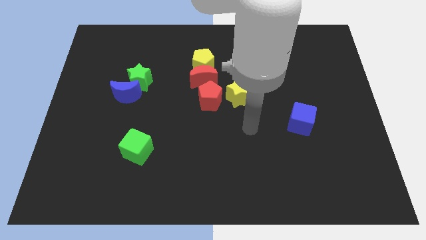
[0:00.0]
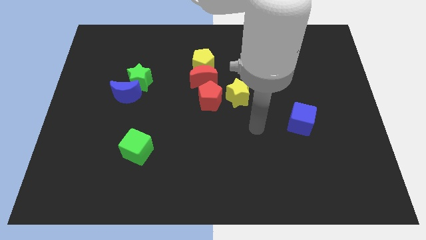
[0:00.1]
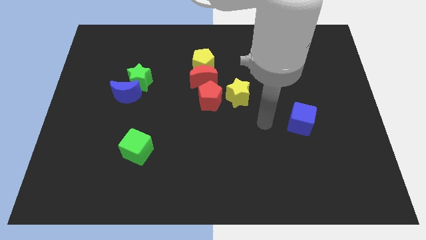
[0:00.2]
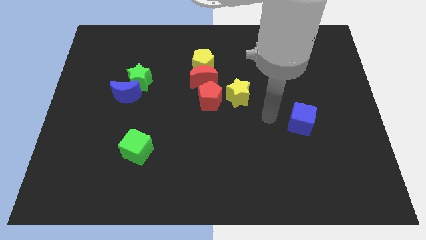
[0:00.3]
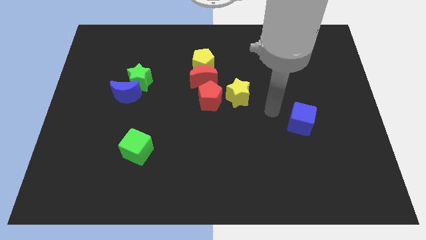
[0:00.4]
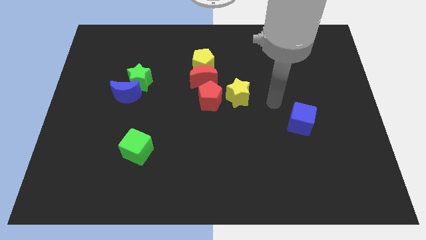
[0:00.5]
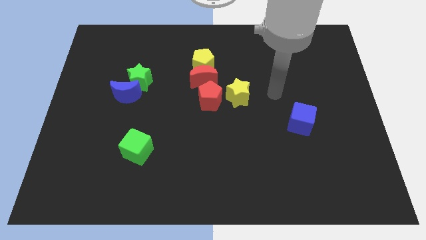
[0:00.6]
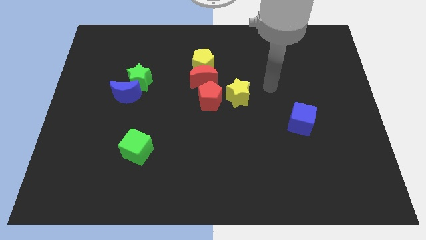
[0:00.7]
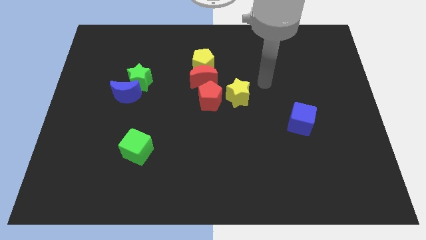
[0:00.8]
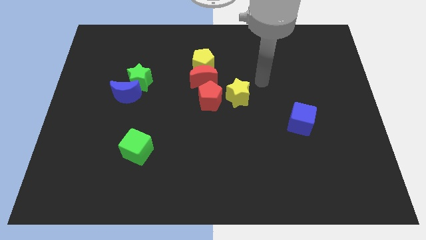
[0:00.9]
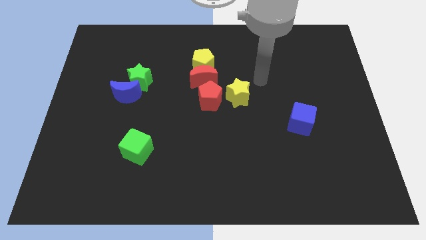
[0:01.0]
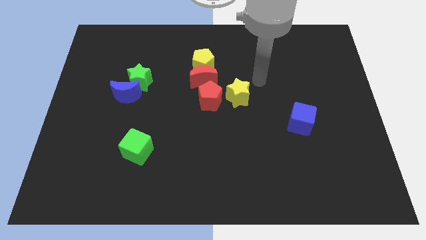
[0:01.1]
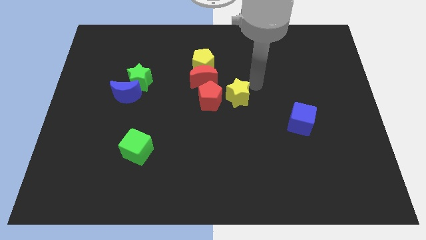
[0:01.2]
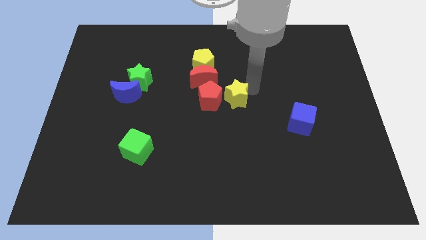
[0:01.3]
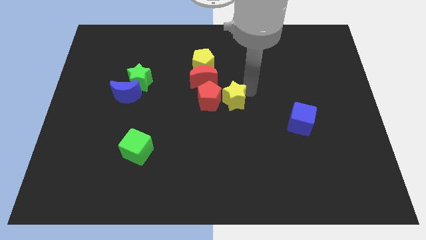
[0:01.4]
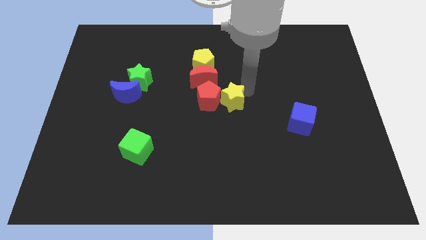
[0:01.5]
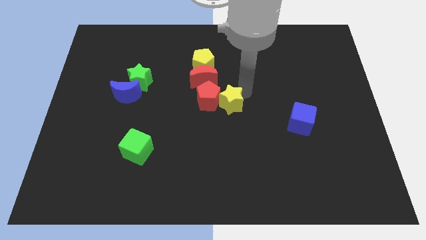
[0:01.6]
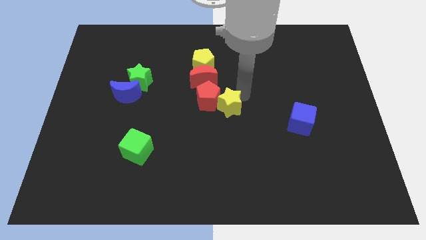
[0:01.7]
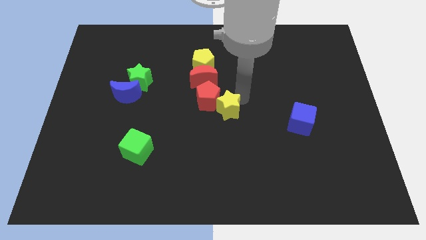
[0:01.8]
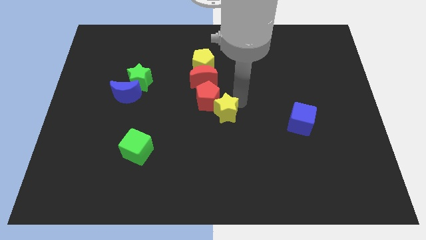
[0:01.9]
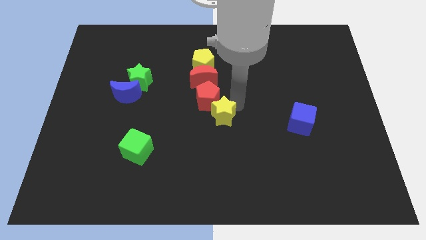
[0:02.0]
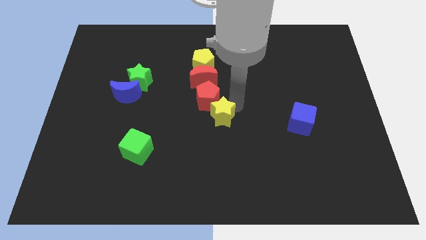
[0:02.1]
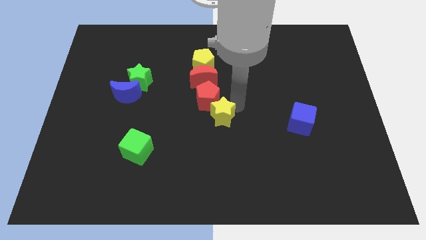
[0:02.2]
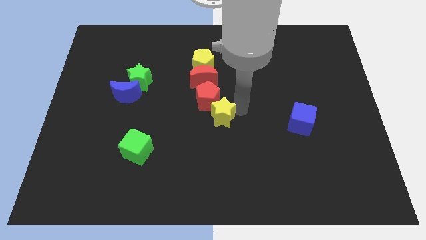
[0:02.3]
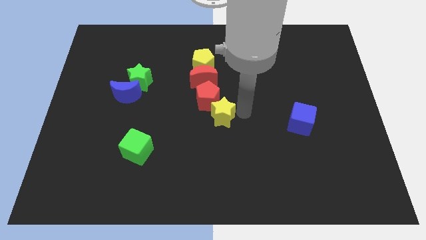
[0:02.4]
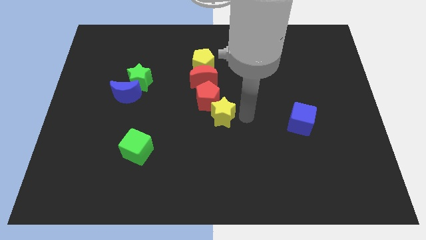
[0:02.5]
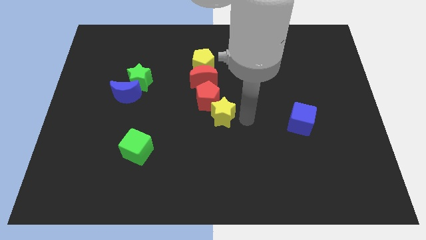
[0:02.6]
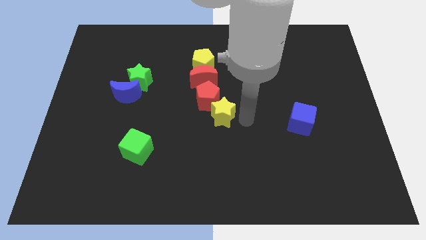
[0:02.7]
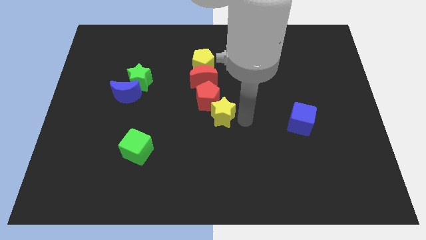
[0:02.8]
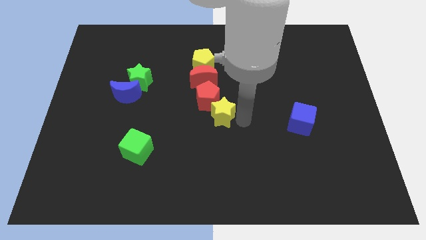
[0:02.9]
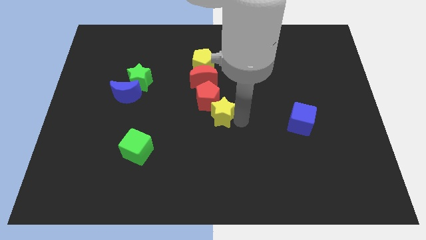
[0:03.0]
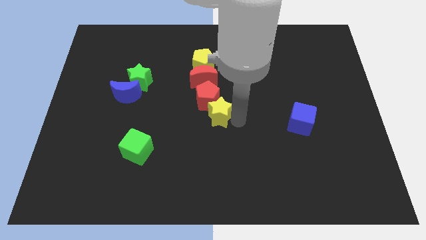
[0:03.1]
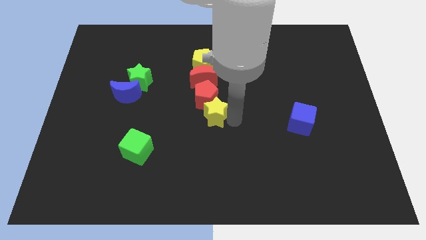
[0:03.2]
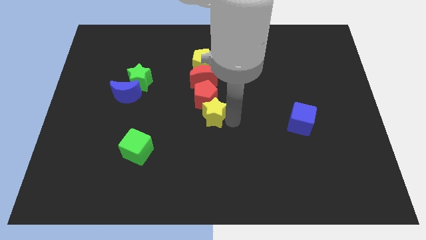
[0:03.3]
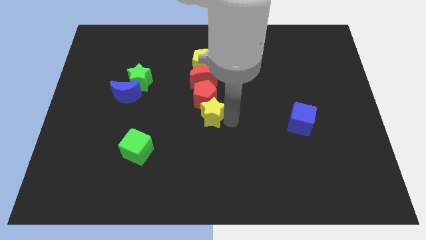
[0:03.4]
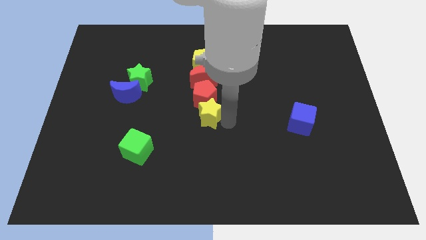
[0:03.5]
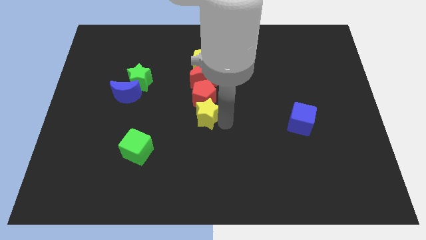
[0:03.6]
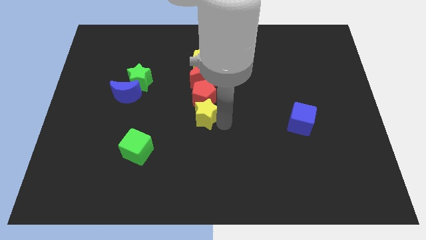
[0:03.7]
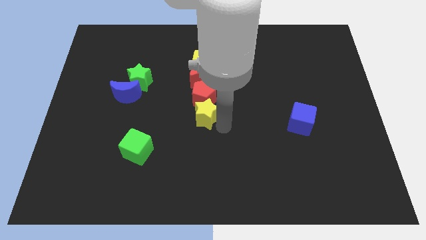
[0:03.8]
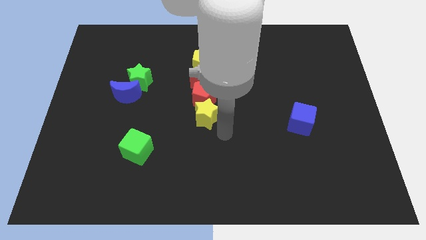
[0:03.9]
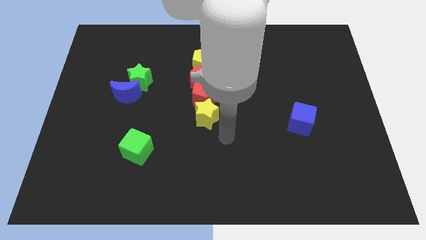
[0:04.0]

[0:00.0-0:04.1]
slide yellow star below red pentagon

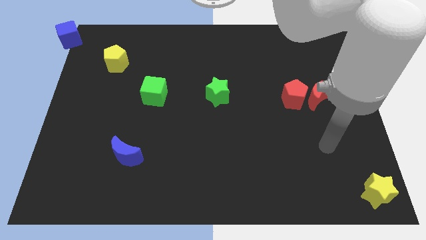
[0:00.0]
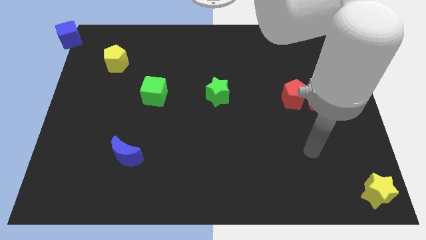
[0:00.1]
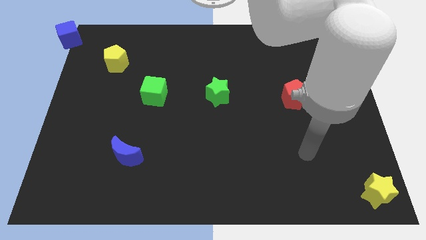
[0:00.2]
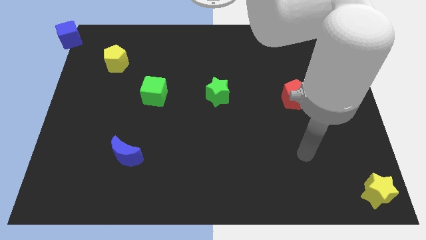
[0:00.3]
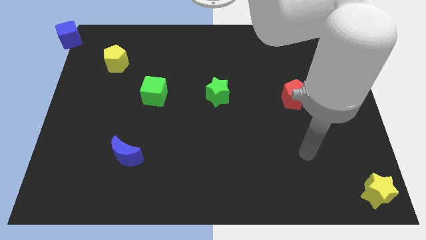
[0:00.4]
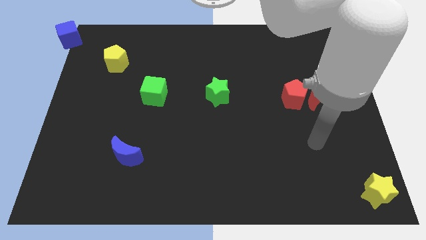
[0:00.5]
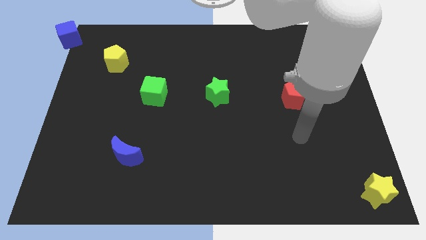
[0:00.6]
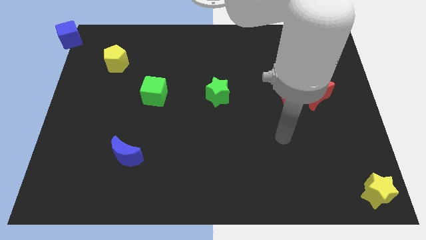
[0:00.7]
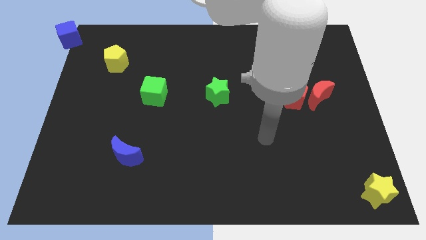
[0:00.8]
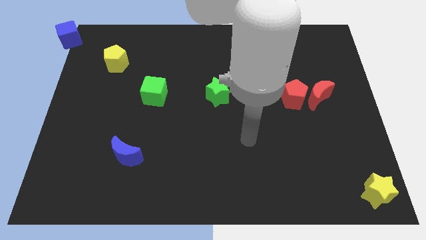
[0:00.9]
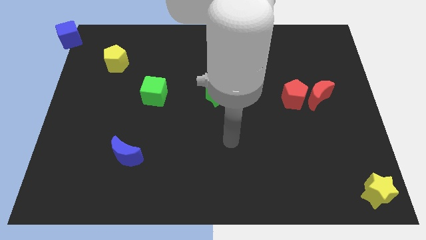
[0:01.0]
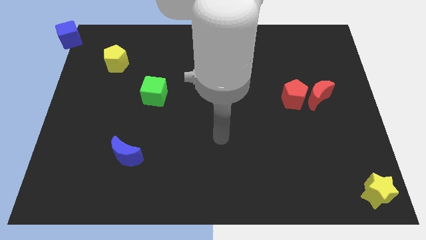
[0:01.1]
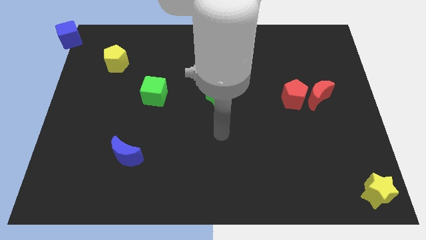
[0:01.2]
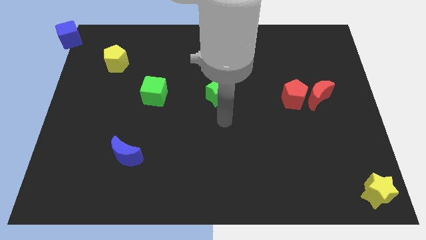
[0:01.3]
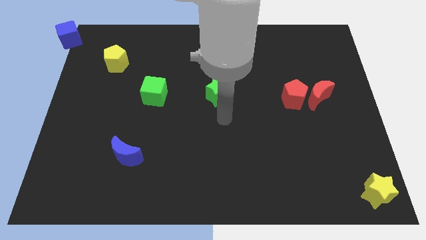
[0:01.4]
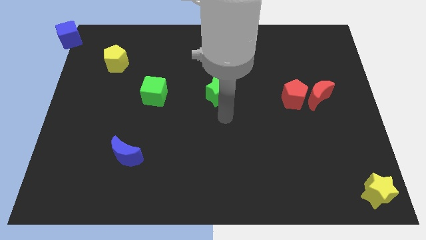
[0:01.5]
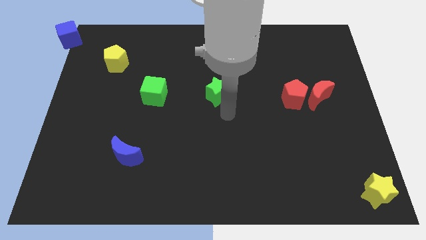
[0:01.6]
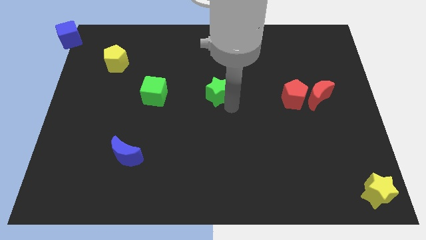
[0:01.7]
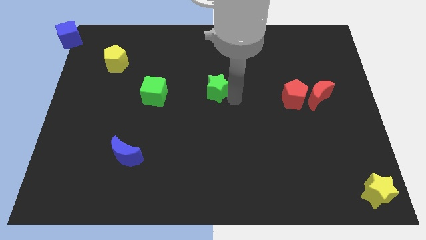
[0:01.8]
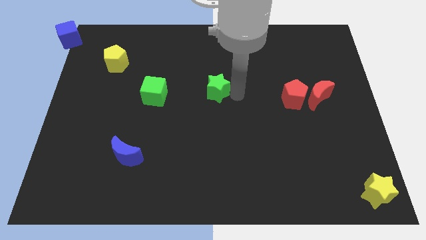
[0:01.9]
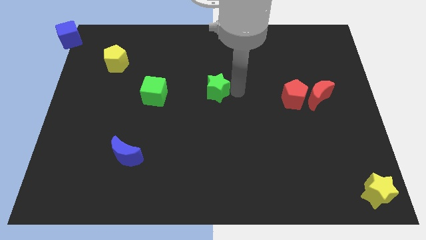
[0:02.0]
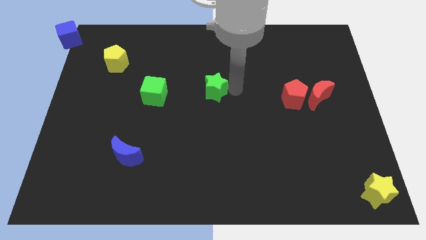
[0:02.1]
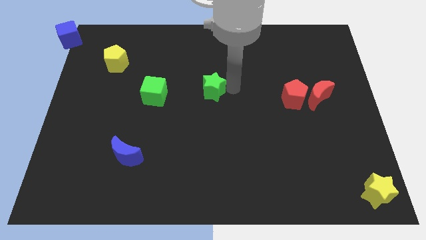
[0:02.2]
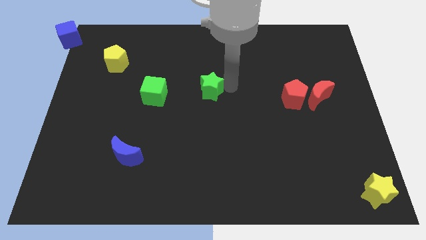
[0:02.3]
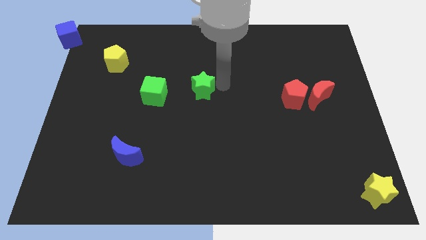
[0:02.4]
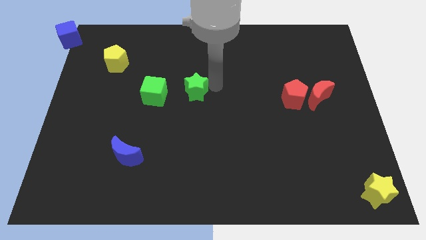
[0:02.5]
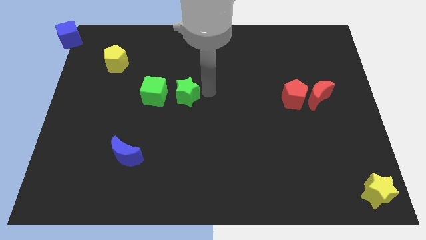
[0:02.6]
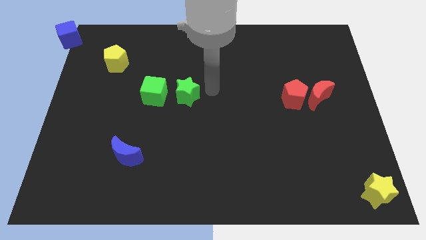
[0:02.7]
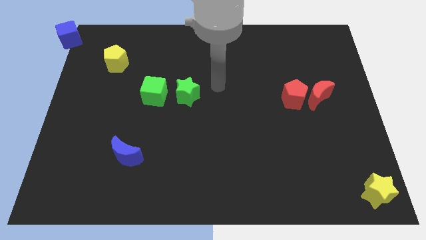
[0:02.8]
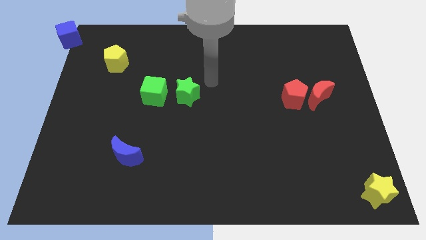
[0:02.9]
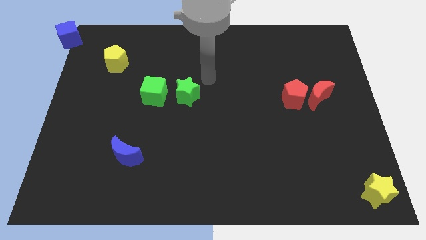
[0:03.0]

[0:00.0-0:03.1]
move green star near to the green cube

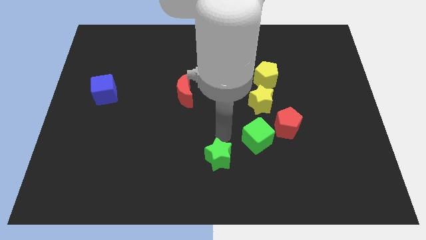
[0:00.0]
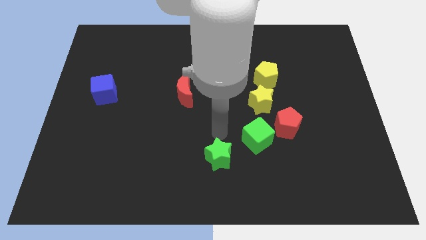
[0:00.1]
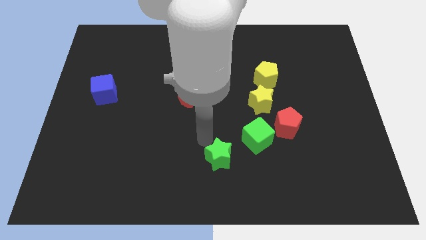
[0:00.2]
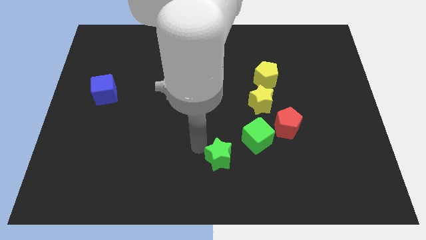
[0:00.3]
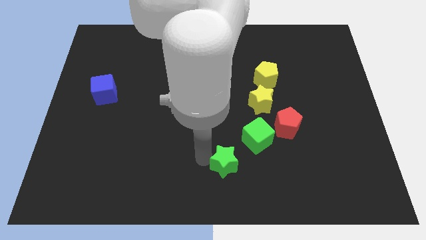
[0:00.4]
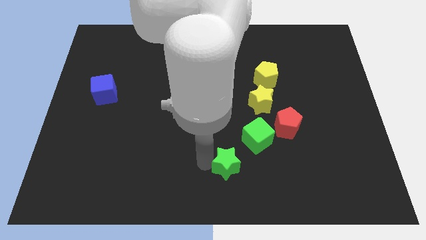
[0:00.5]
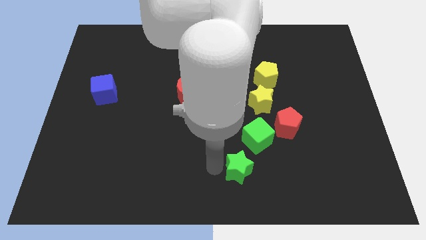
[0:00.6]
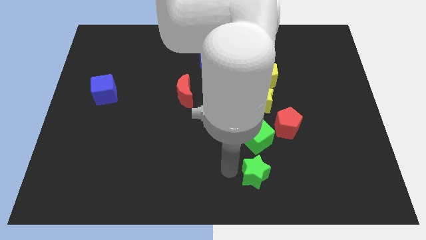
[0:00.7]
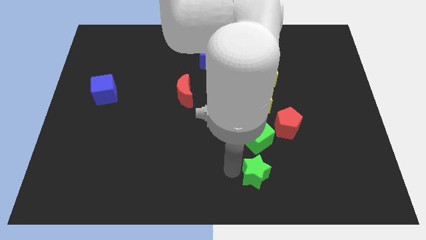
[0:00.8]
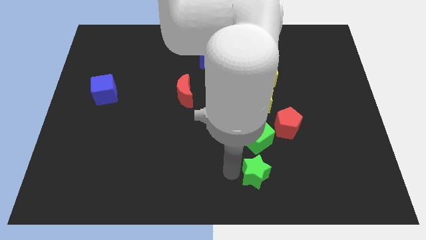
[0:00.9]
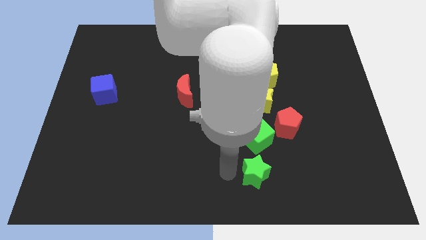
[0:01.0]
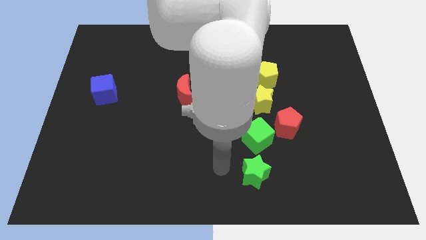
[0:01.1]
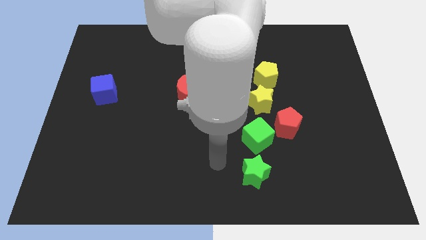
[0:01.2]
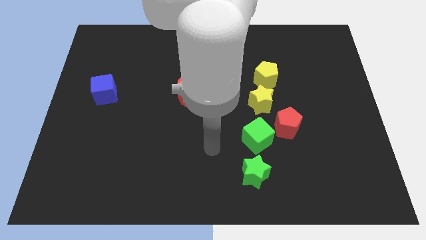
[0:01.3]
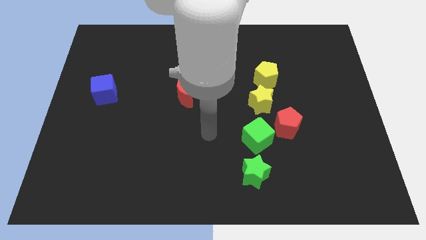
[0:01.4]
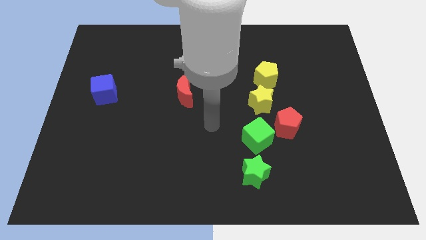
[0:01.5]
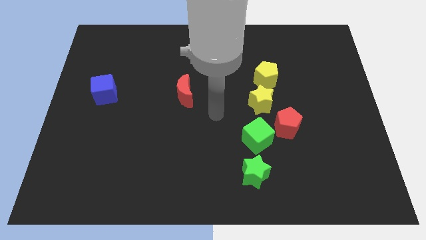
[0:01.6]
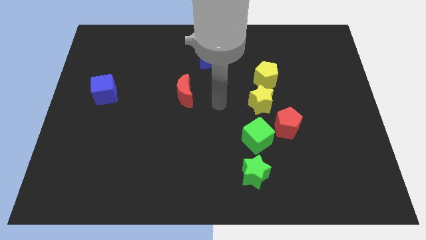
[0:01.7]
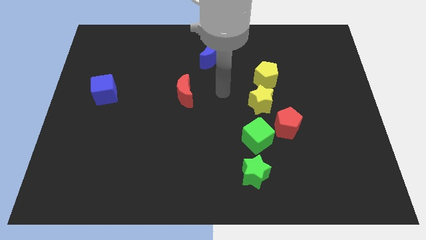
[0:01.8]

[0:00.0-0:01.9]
move green star to the bottom of the green cube
